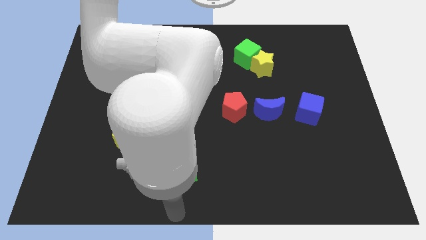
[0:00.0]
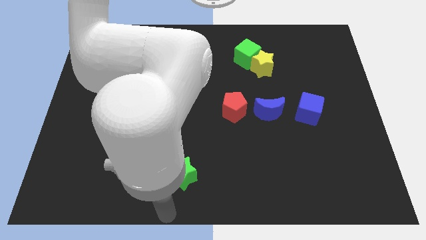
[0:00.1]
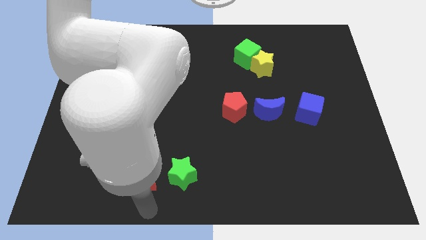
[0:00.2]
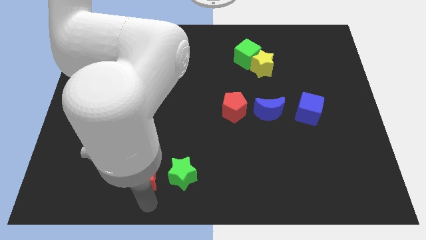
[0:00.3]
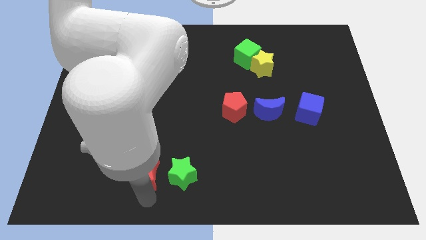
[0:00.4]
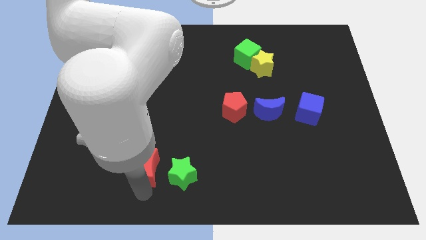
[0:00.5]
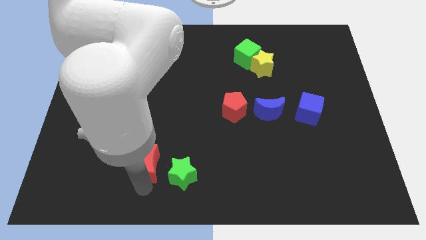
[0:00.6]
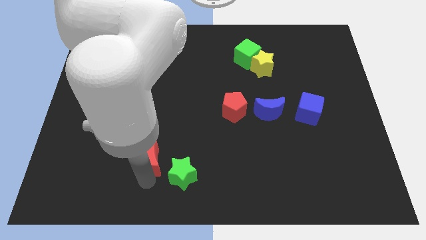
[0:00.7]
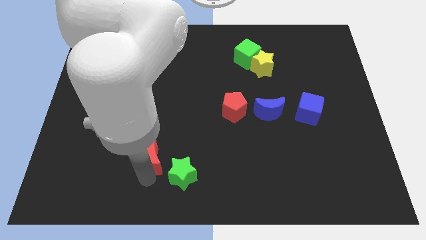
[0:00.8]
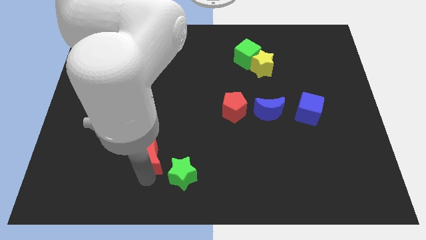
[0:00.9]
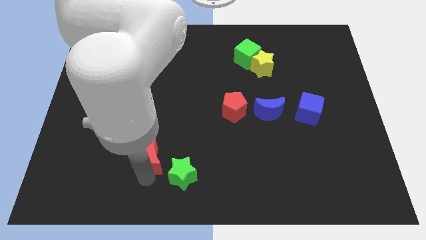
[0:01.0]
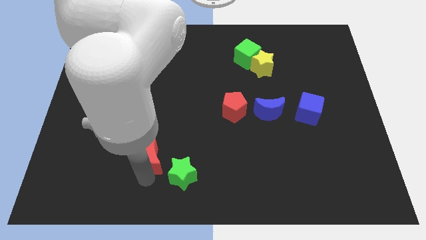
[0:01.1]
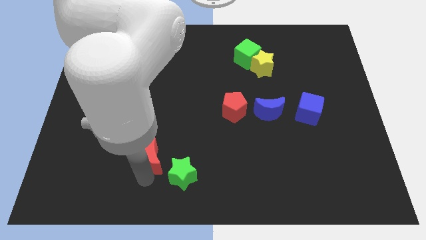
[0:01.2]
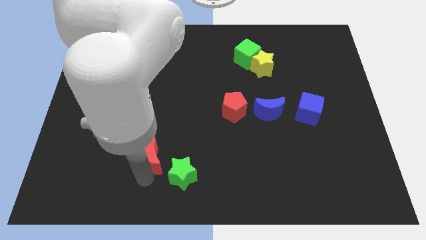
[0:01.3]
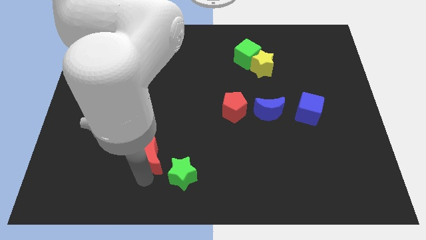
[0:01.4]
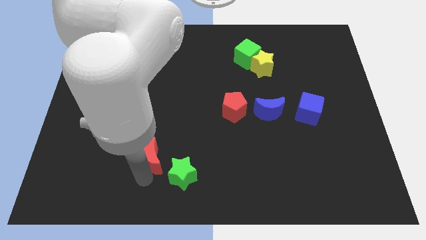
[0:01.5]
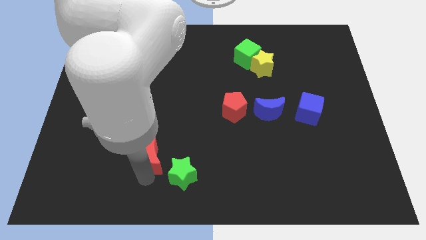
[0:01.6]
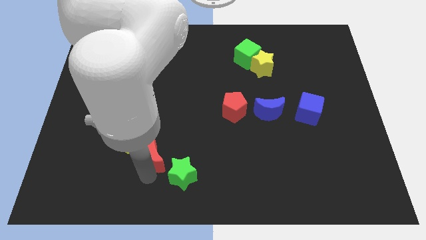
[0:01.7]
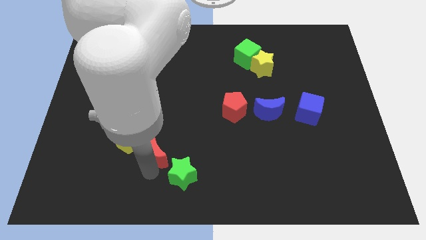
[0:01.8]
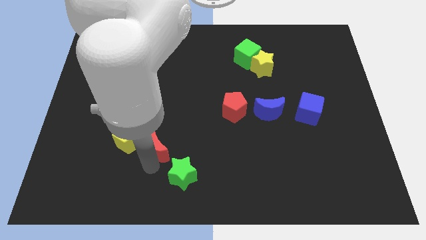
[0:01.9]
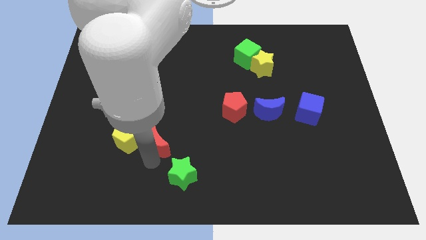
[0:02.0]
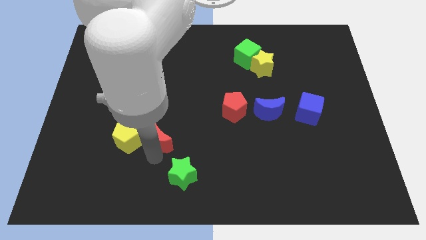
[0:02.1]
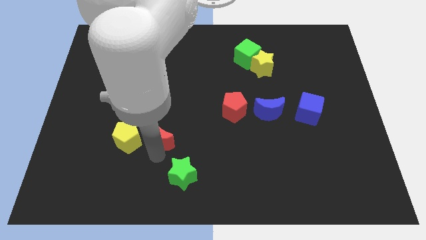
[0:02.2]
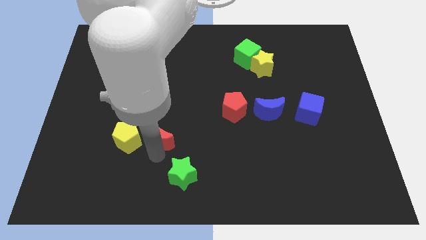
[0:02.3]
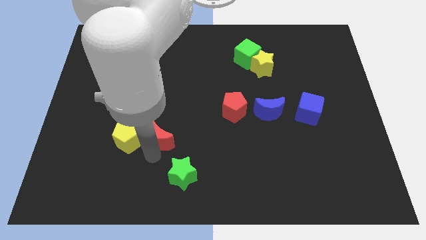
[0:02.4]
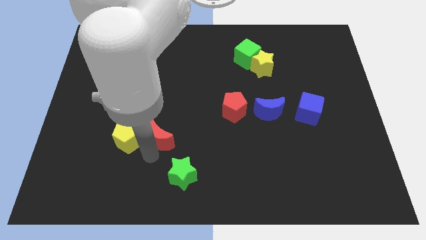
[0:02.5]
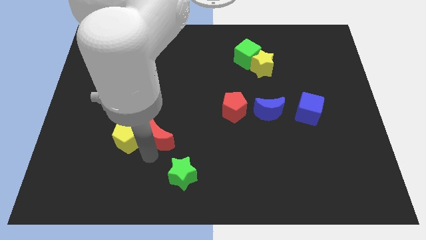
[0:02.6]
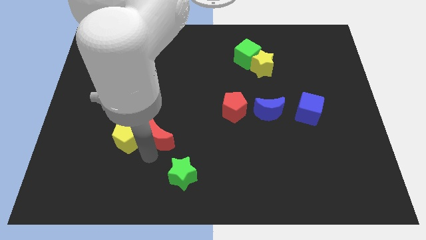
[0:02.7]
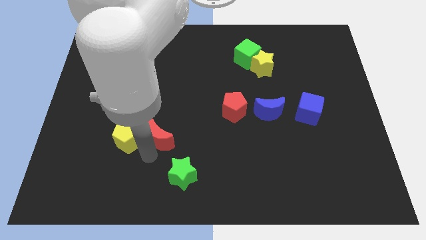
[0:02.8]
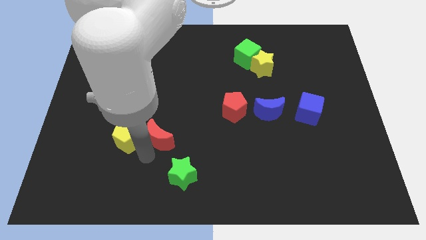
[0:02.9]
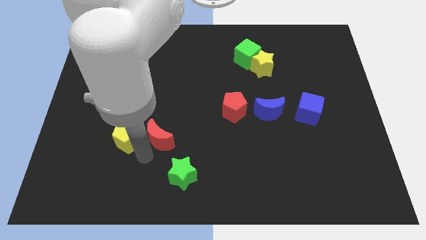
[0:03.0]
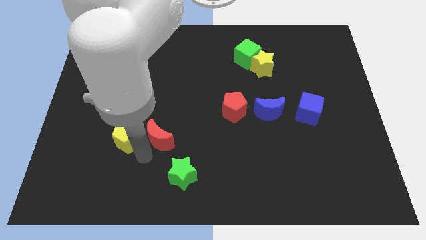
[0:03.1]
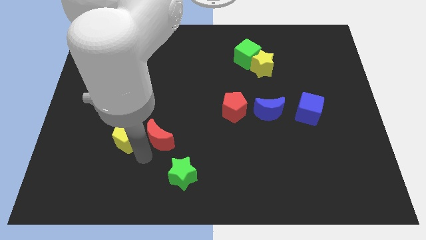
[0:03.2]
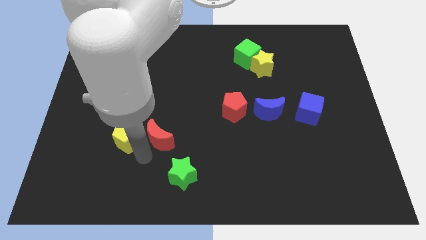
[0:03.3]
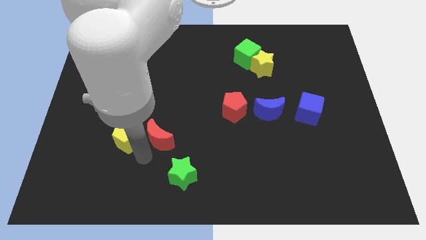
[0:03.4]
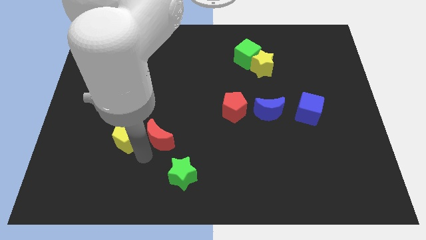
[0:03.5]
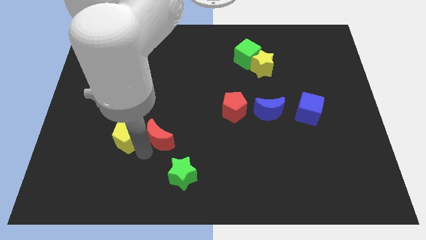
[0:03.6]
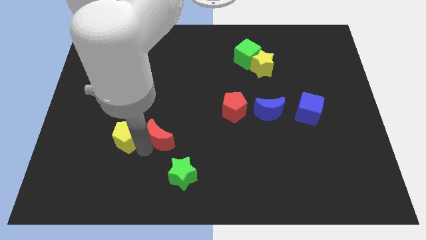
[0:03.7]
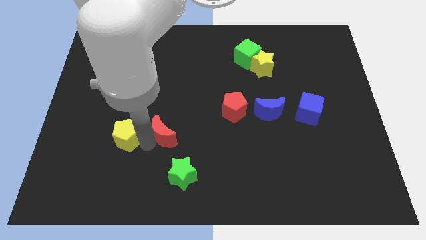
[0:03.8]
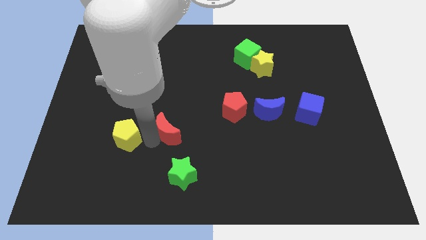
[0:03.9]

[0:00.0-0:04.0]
move the red crescent towards top

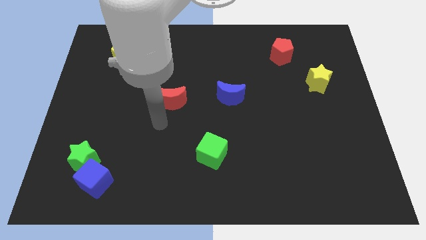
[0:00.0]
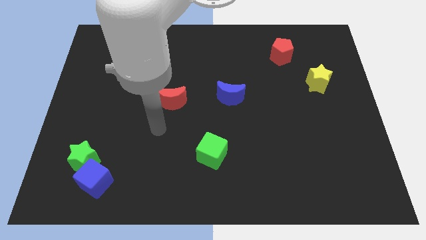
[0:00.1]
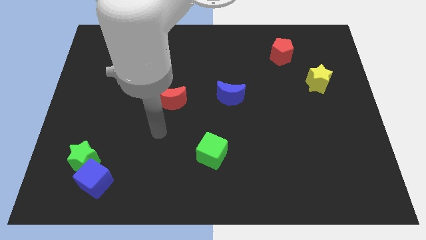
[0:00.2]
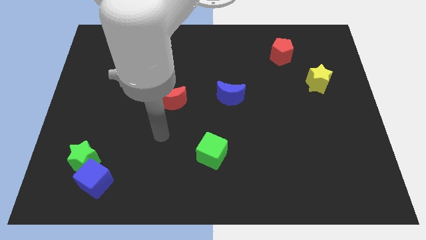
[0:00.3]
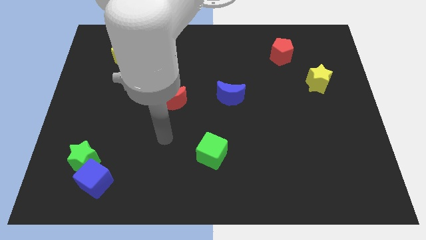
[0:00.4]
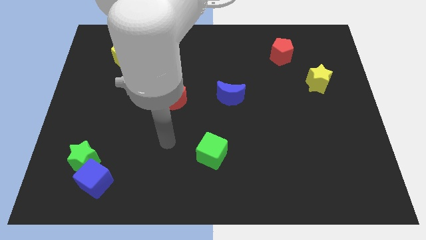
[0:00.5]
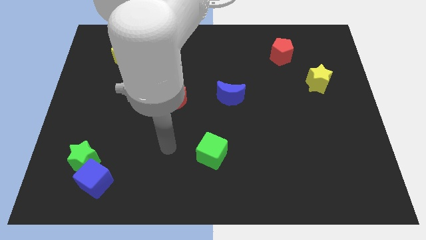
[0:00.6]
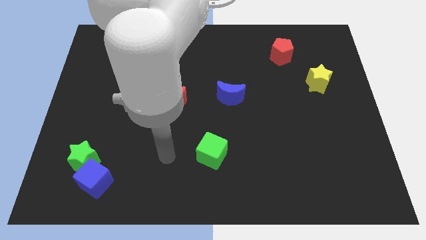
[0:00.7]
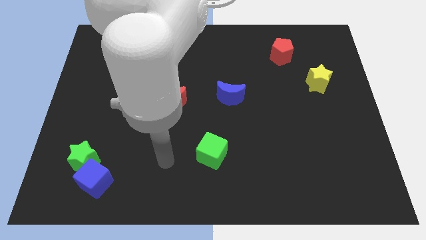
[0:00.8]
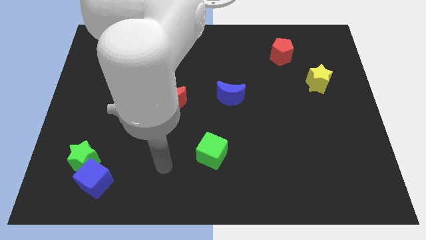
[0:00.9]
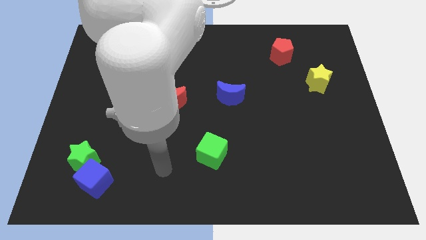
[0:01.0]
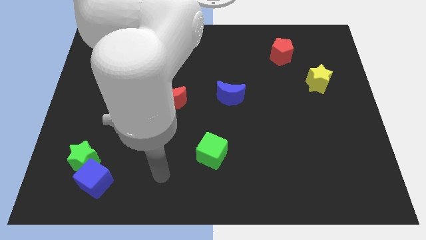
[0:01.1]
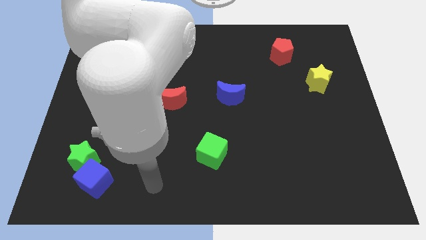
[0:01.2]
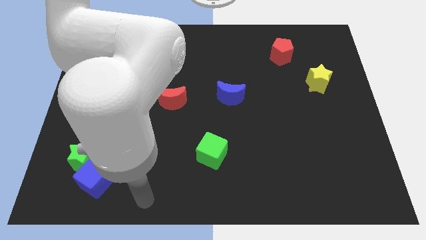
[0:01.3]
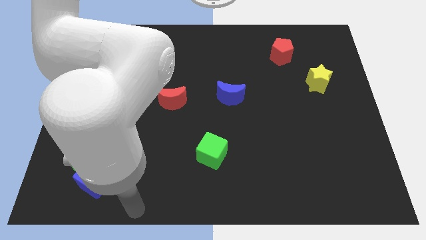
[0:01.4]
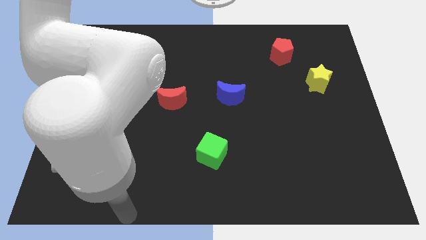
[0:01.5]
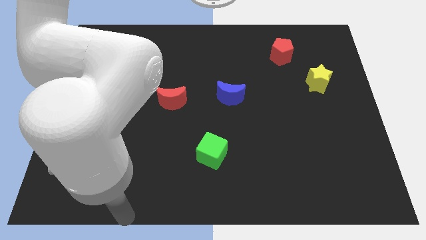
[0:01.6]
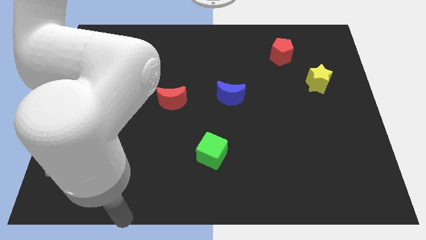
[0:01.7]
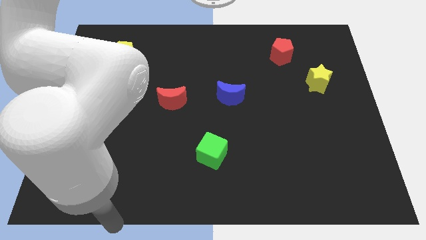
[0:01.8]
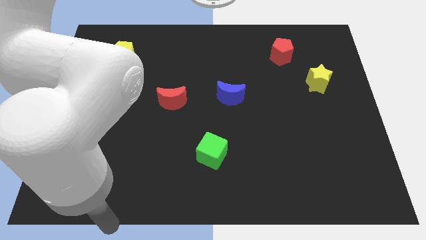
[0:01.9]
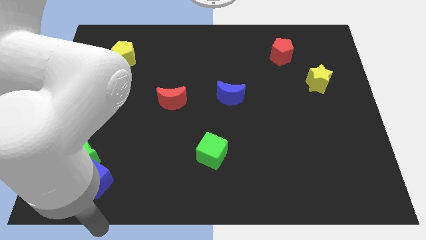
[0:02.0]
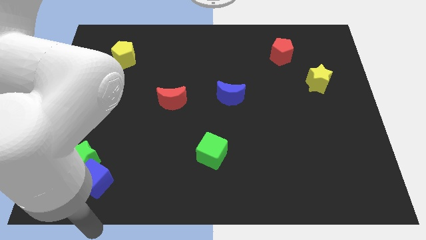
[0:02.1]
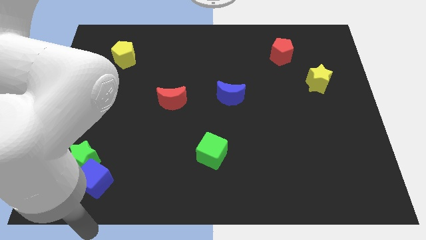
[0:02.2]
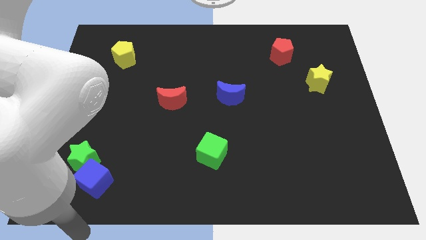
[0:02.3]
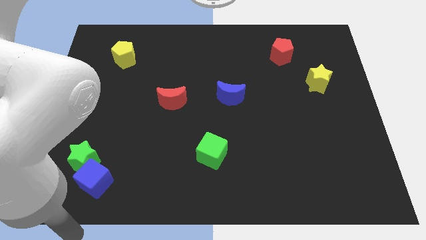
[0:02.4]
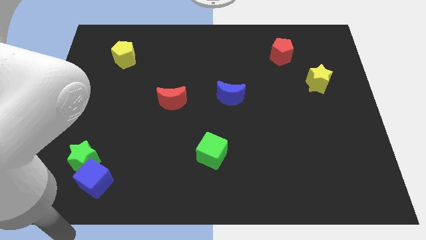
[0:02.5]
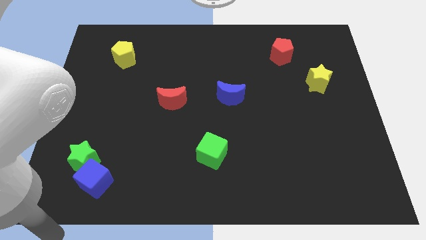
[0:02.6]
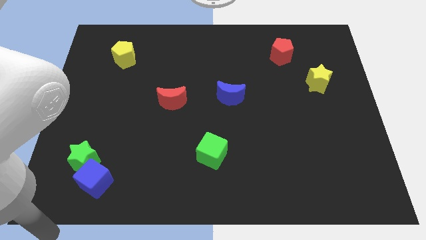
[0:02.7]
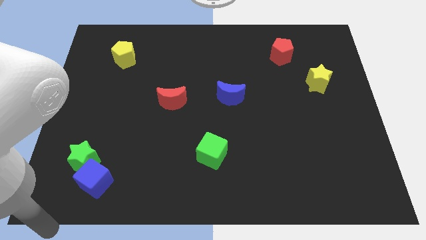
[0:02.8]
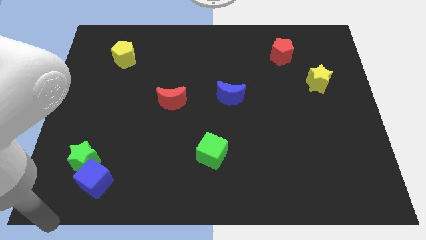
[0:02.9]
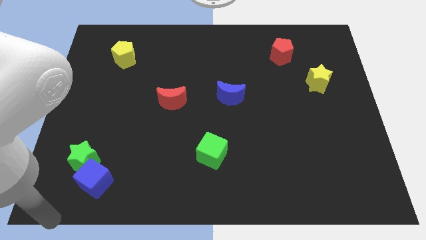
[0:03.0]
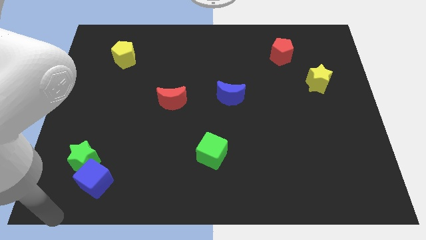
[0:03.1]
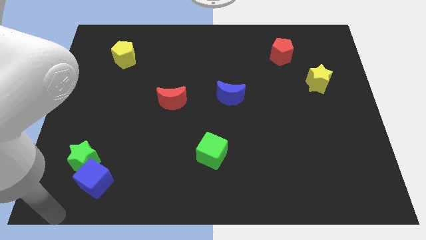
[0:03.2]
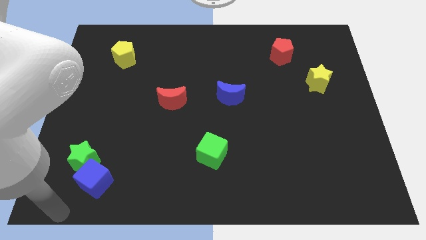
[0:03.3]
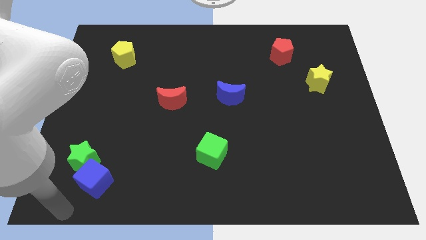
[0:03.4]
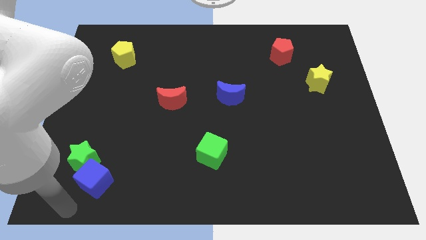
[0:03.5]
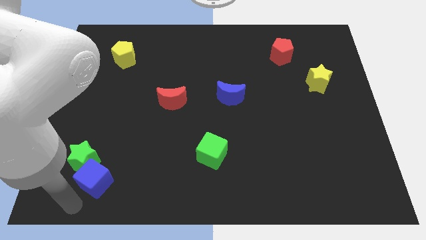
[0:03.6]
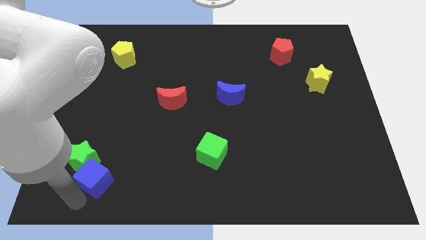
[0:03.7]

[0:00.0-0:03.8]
move your arm below the blue cube

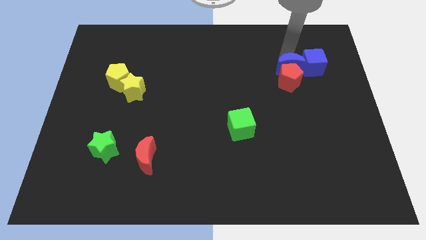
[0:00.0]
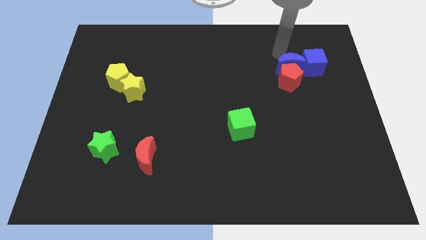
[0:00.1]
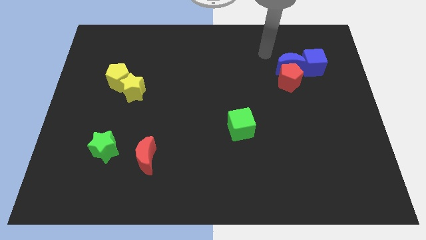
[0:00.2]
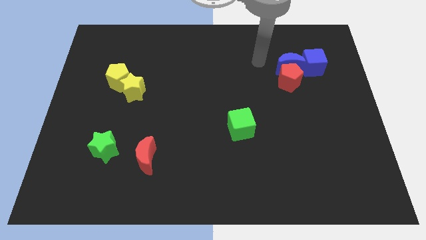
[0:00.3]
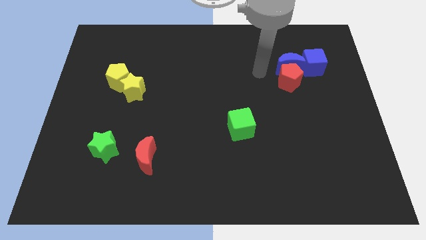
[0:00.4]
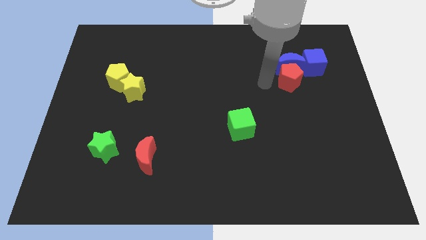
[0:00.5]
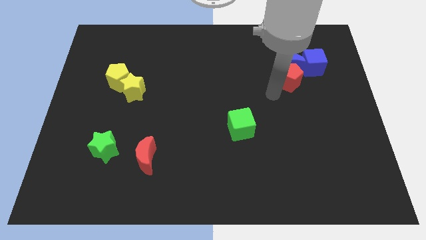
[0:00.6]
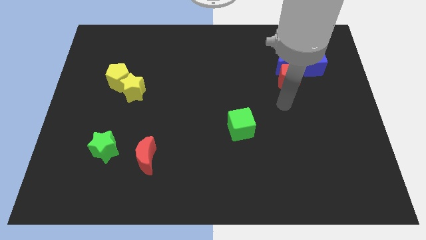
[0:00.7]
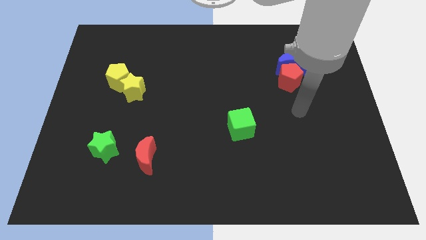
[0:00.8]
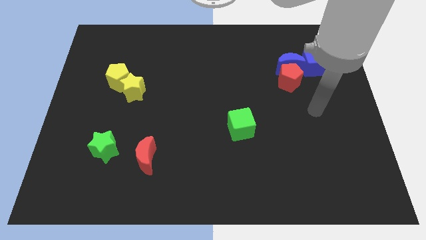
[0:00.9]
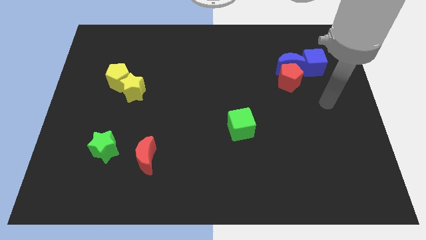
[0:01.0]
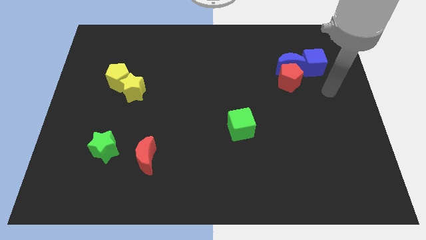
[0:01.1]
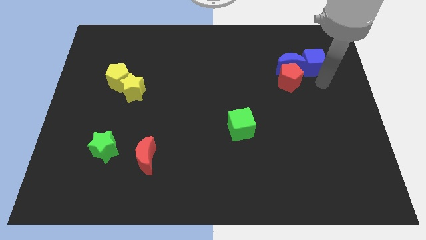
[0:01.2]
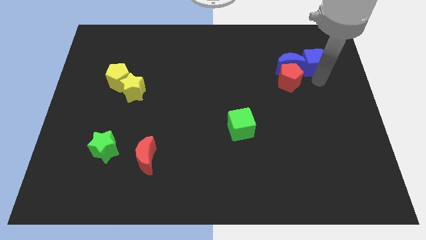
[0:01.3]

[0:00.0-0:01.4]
point your arm at the bottom of the blue cube
